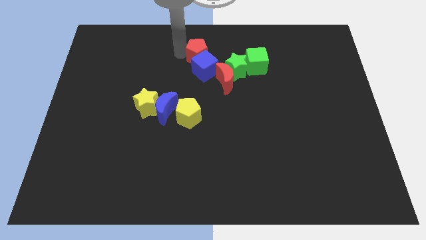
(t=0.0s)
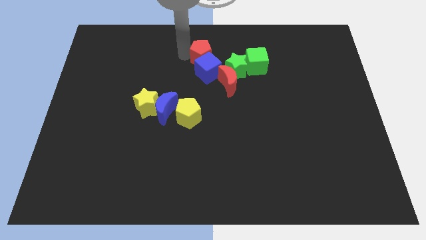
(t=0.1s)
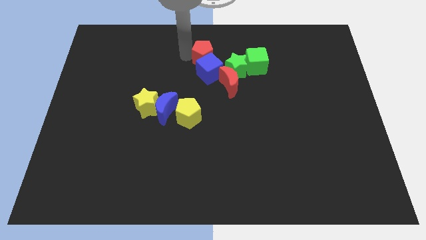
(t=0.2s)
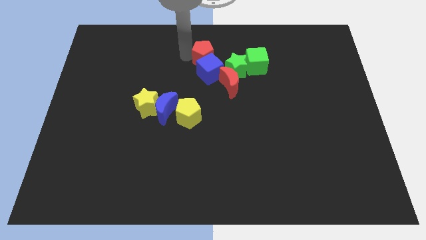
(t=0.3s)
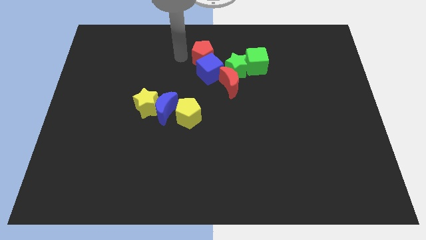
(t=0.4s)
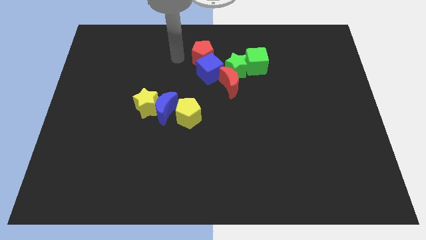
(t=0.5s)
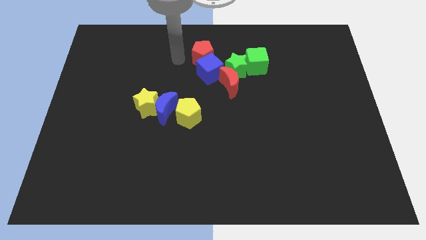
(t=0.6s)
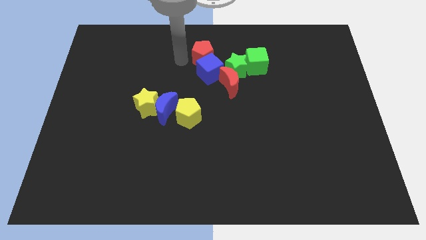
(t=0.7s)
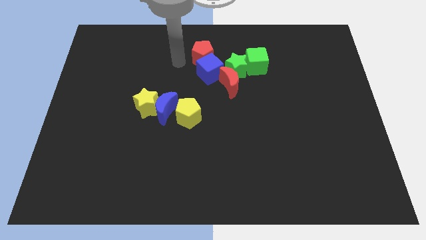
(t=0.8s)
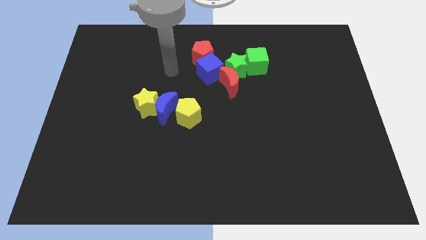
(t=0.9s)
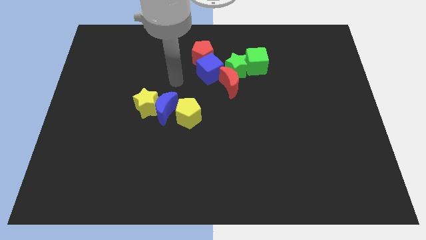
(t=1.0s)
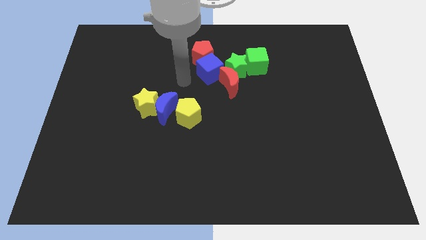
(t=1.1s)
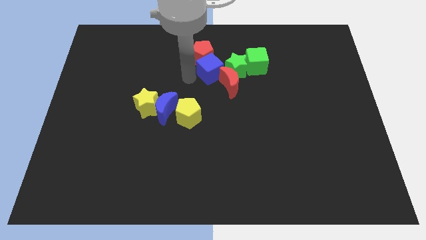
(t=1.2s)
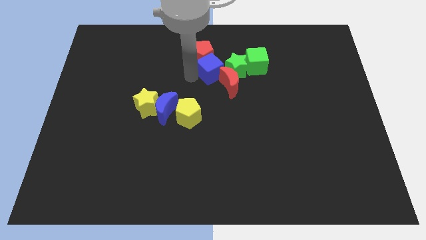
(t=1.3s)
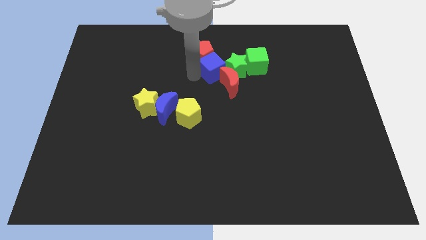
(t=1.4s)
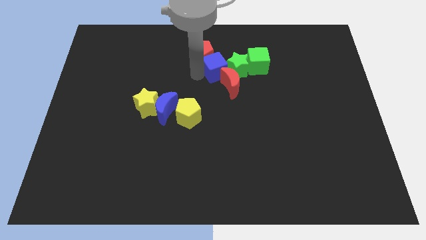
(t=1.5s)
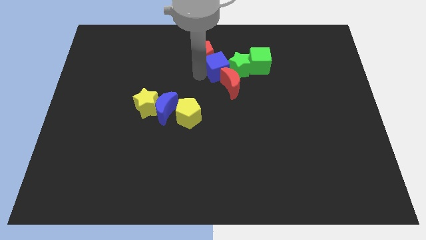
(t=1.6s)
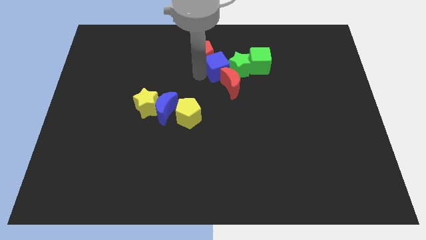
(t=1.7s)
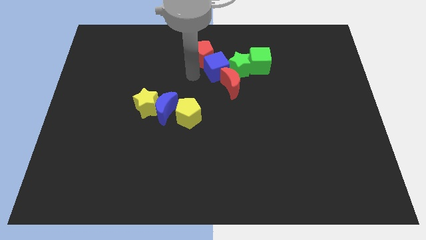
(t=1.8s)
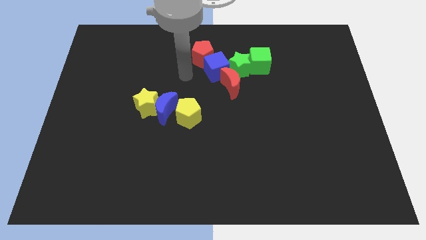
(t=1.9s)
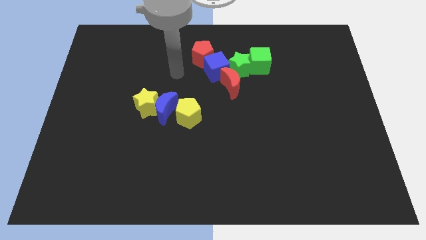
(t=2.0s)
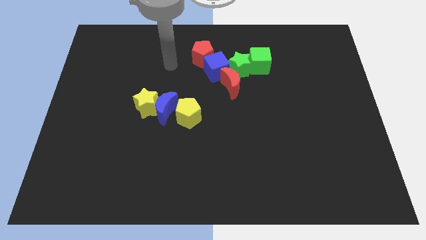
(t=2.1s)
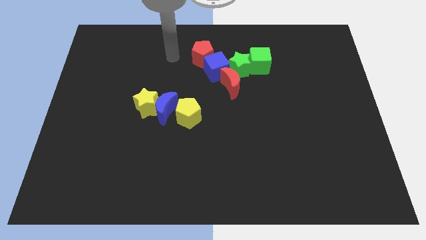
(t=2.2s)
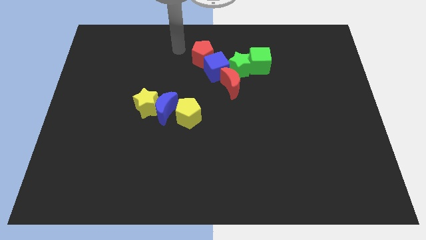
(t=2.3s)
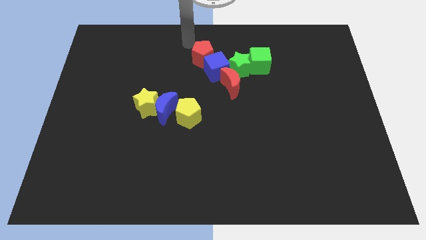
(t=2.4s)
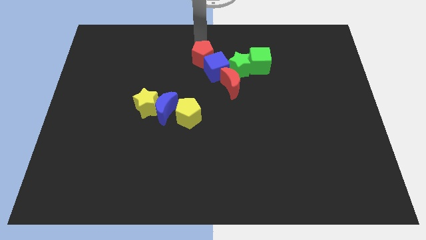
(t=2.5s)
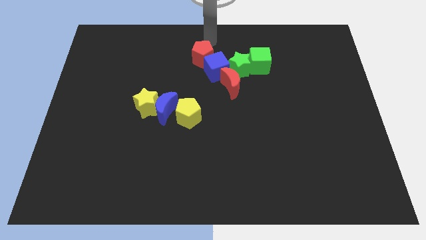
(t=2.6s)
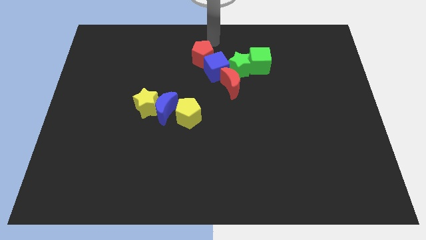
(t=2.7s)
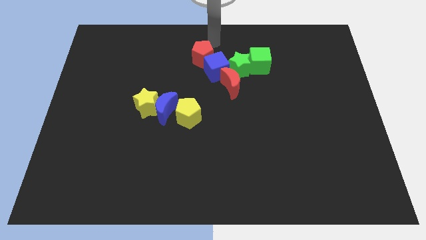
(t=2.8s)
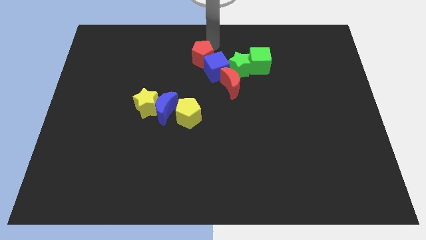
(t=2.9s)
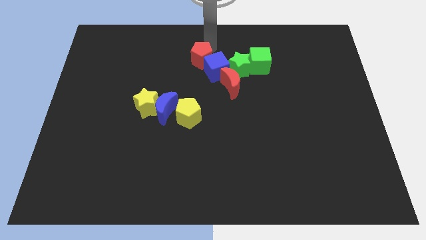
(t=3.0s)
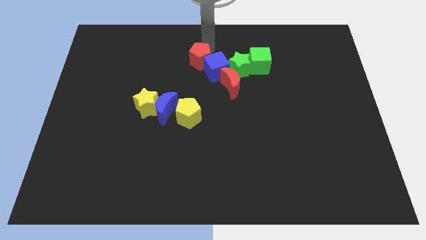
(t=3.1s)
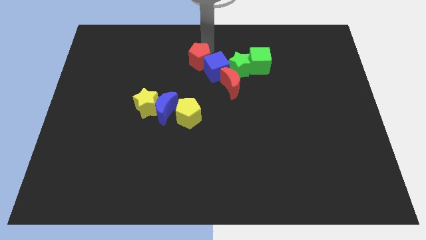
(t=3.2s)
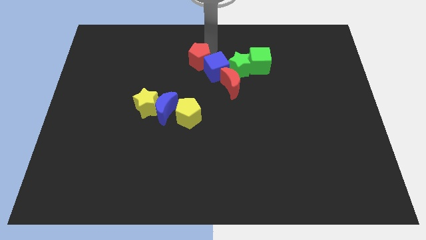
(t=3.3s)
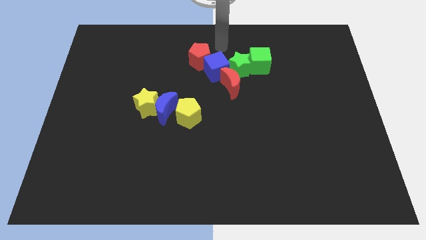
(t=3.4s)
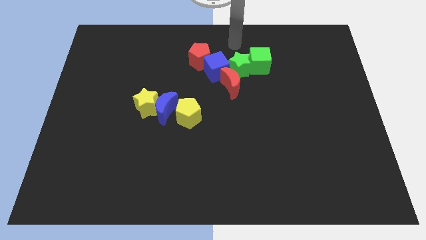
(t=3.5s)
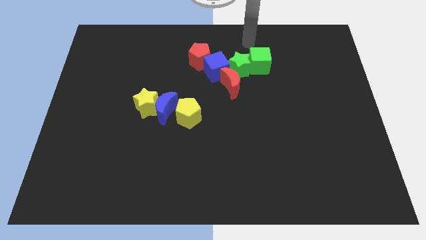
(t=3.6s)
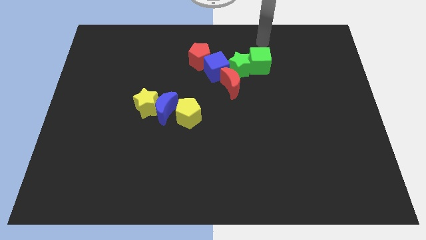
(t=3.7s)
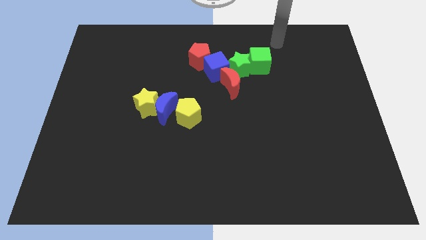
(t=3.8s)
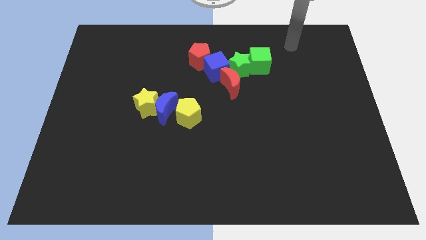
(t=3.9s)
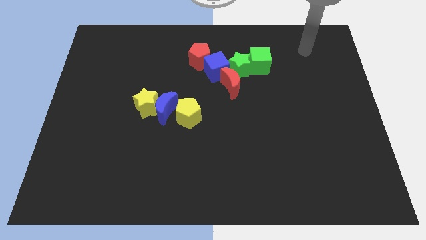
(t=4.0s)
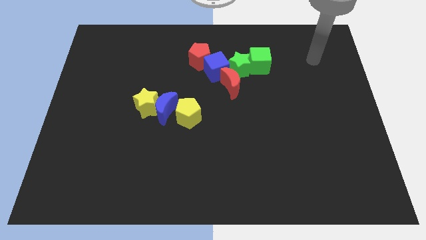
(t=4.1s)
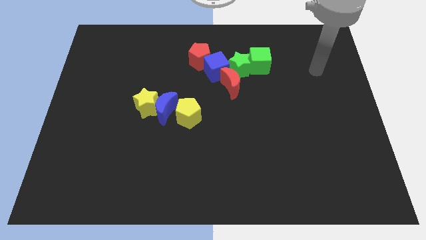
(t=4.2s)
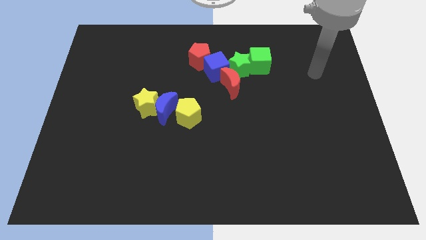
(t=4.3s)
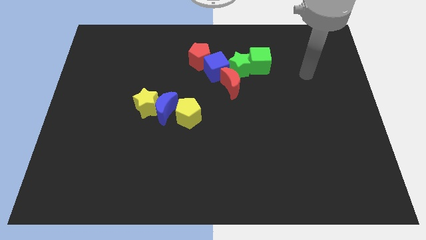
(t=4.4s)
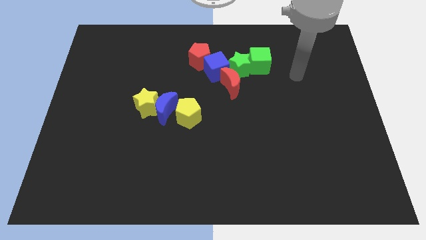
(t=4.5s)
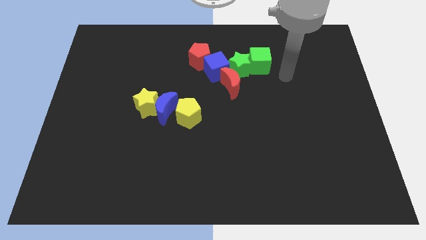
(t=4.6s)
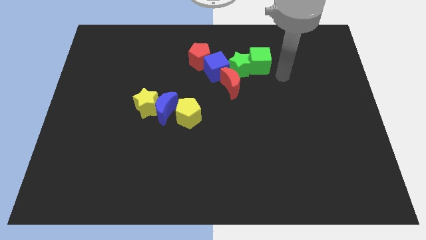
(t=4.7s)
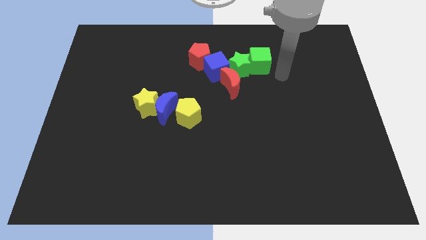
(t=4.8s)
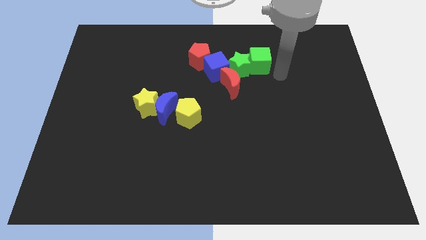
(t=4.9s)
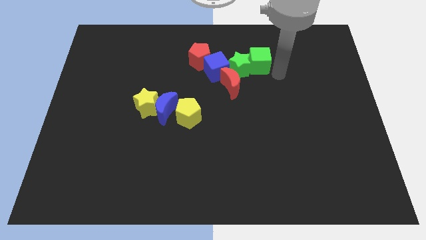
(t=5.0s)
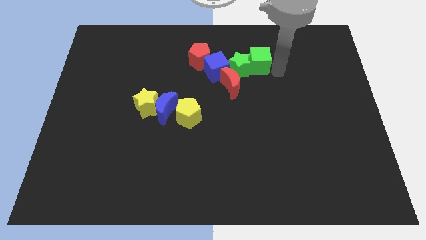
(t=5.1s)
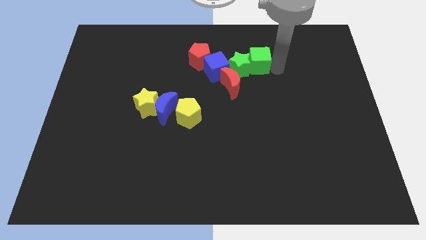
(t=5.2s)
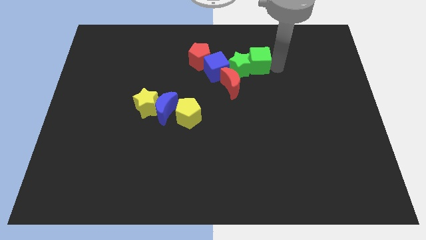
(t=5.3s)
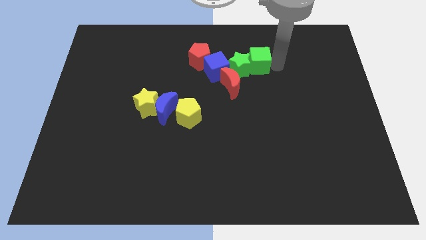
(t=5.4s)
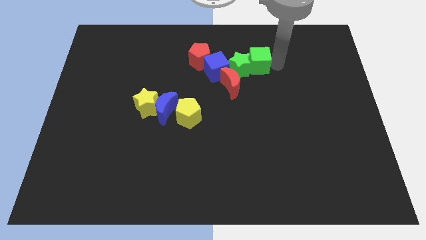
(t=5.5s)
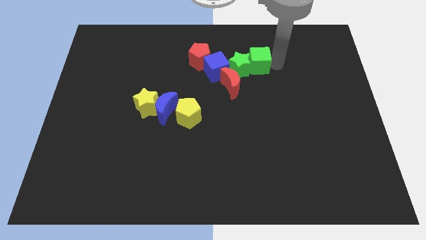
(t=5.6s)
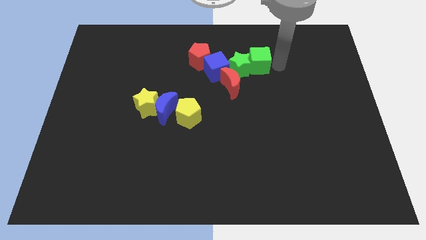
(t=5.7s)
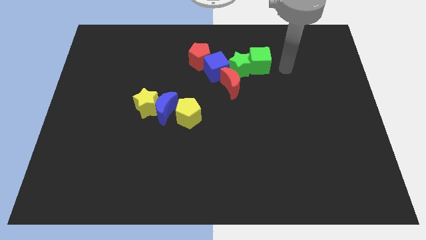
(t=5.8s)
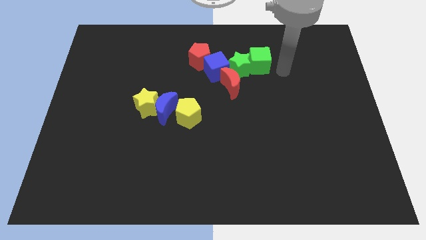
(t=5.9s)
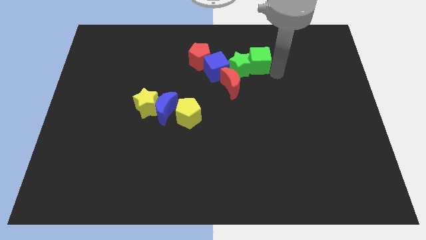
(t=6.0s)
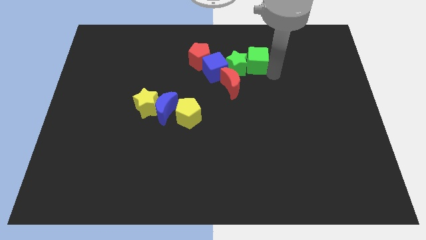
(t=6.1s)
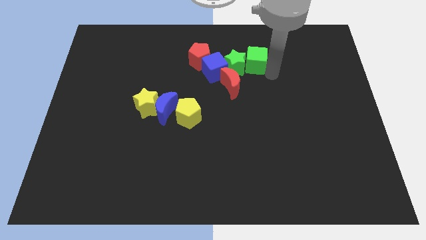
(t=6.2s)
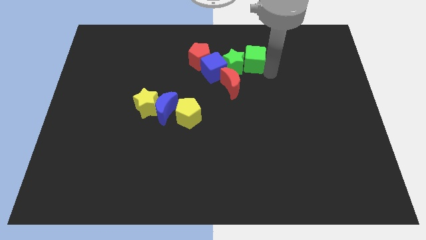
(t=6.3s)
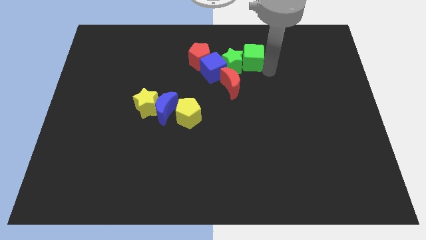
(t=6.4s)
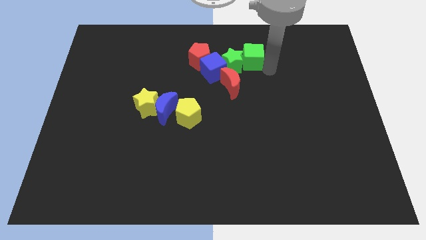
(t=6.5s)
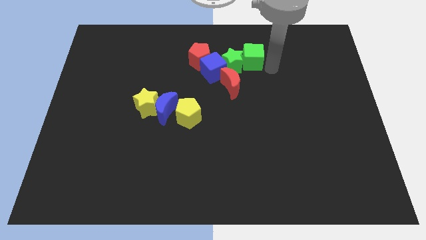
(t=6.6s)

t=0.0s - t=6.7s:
adjust the red pentagon and the blue cube to form a line

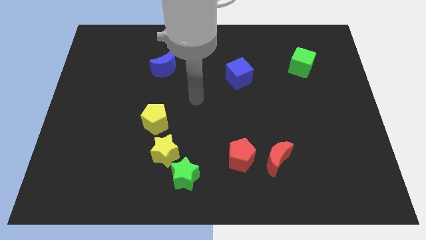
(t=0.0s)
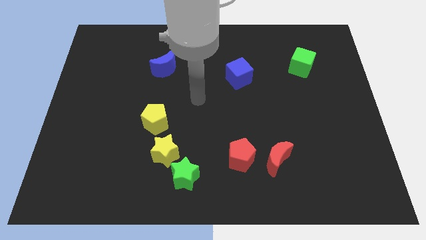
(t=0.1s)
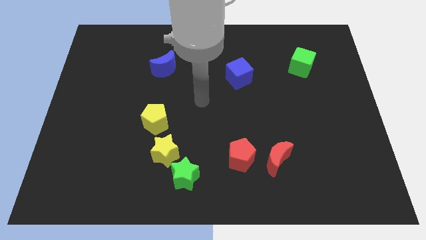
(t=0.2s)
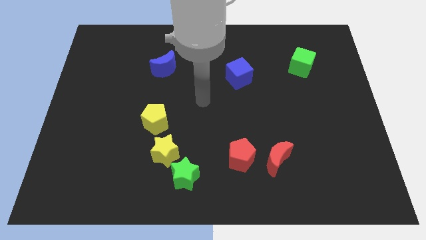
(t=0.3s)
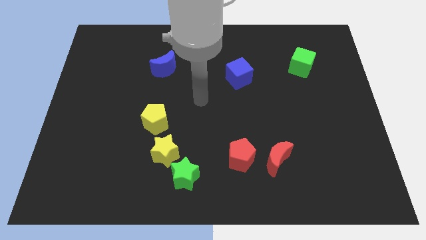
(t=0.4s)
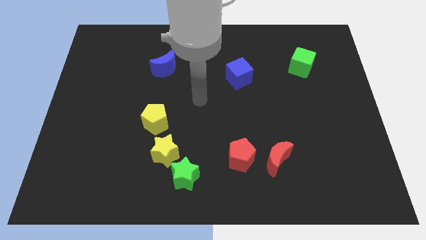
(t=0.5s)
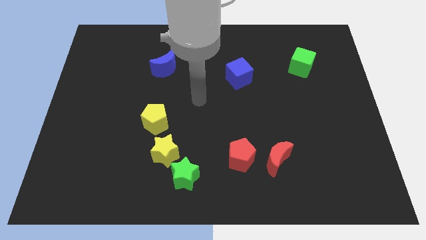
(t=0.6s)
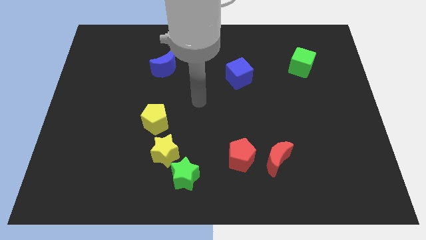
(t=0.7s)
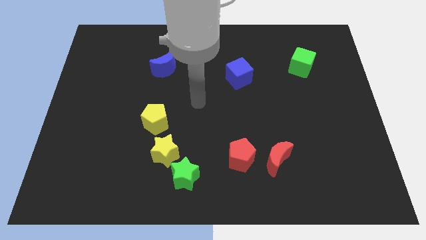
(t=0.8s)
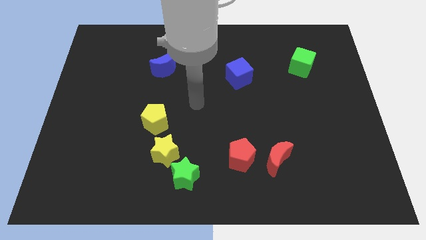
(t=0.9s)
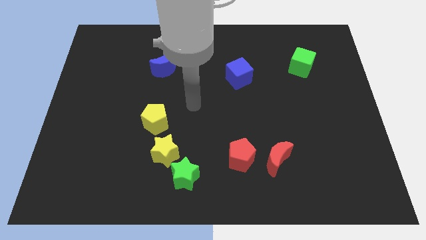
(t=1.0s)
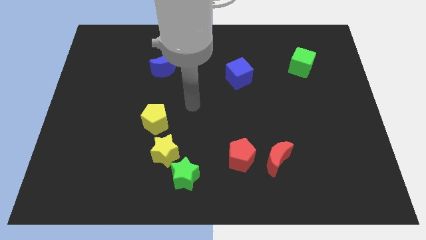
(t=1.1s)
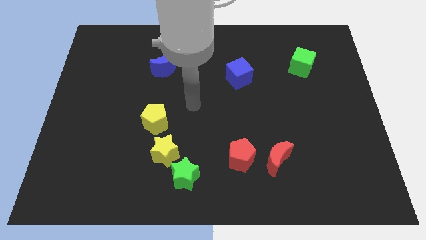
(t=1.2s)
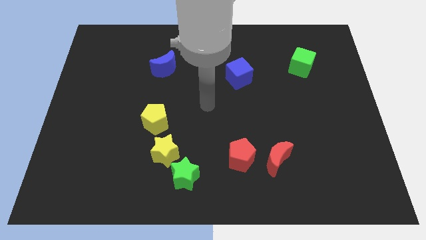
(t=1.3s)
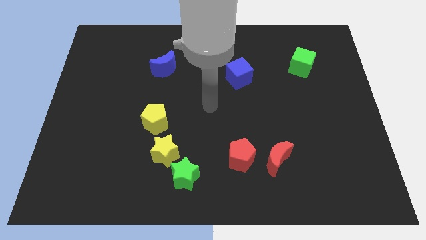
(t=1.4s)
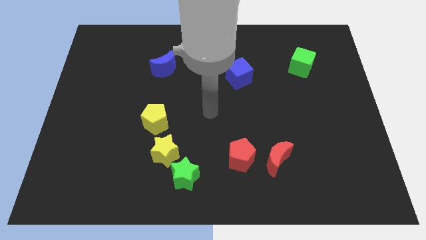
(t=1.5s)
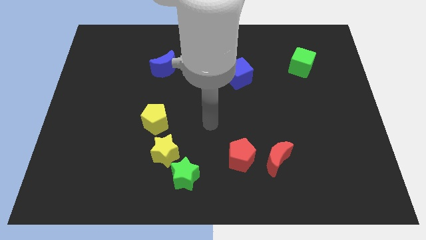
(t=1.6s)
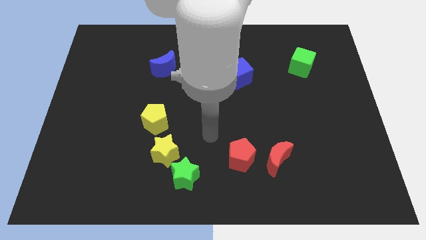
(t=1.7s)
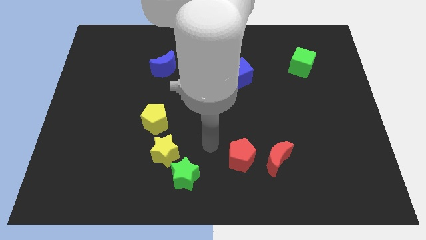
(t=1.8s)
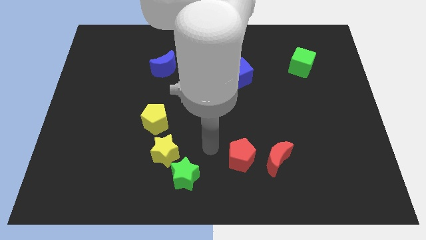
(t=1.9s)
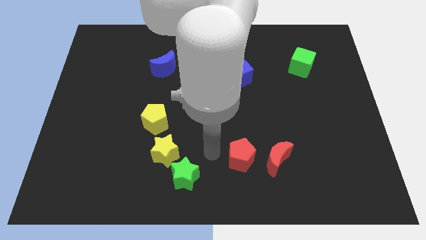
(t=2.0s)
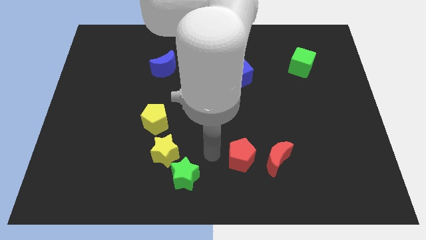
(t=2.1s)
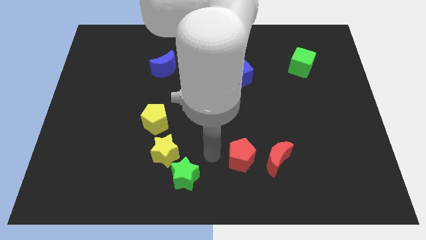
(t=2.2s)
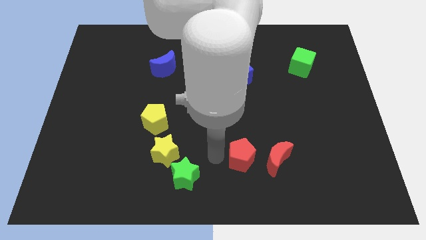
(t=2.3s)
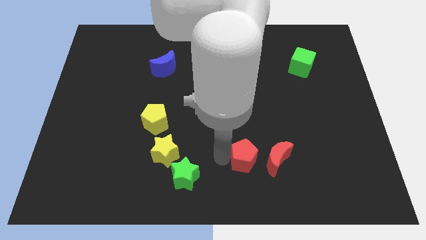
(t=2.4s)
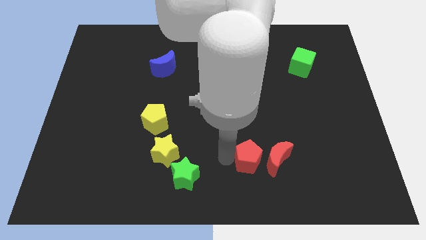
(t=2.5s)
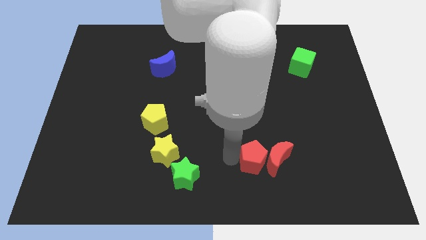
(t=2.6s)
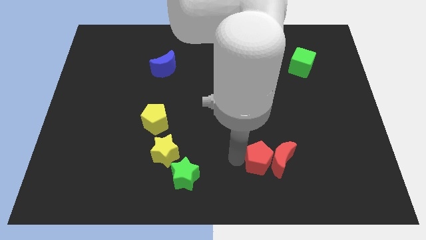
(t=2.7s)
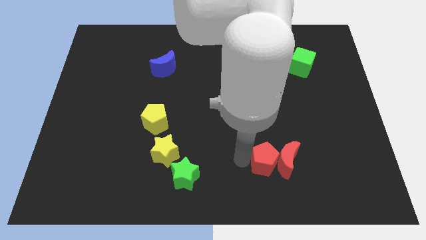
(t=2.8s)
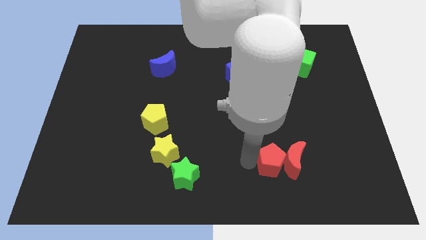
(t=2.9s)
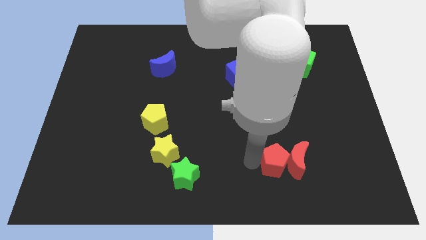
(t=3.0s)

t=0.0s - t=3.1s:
push the red pentagon to the left of the red crescent
